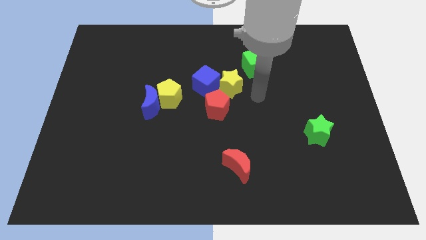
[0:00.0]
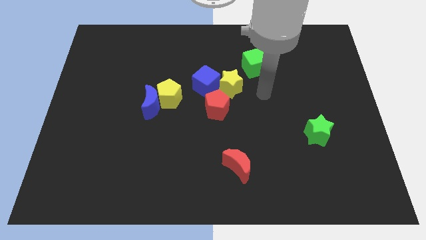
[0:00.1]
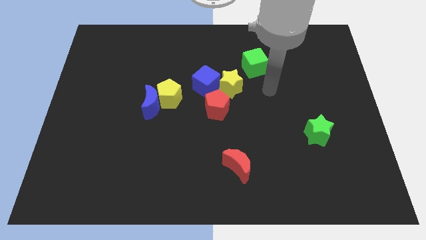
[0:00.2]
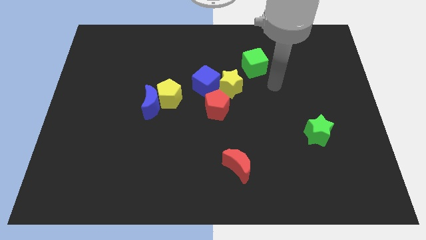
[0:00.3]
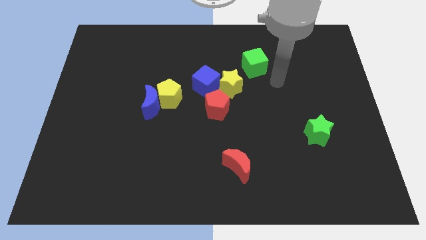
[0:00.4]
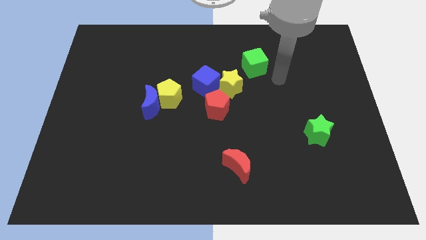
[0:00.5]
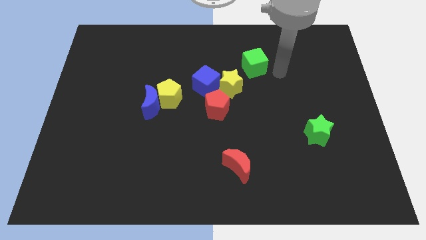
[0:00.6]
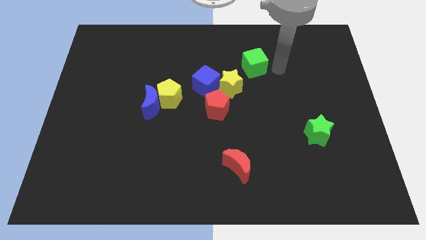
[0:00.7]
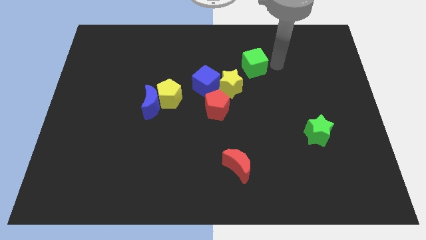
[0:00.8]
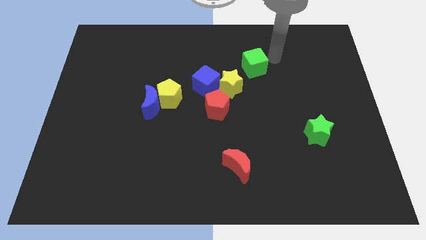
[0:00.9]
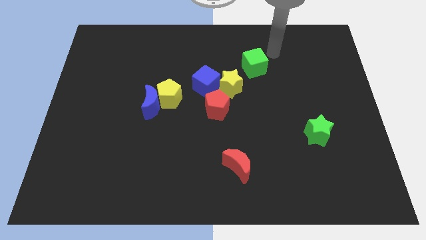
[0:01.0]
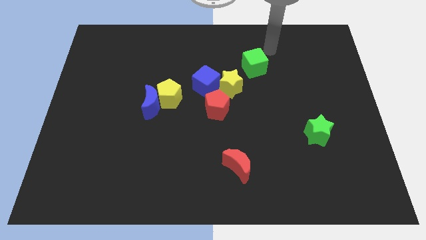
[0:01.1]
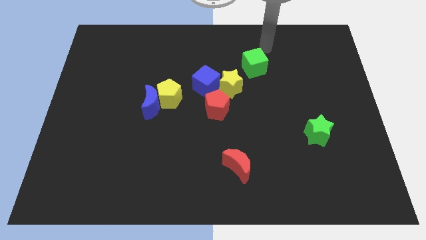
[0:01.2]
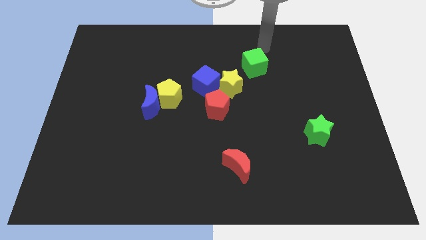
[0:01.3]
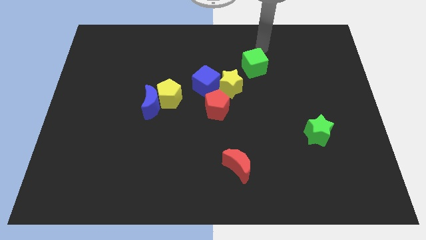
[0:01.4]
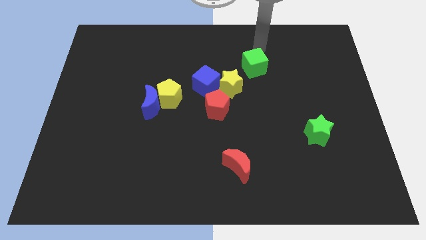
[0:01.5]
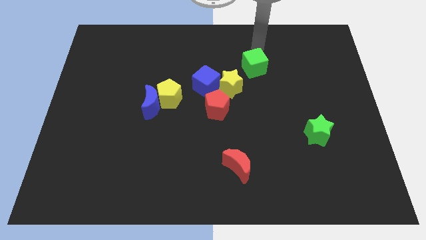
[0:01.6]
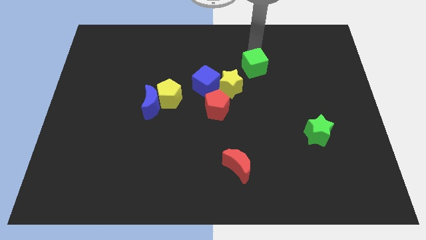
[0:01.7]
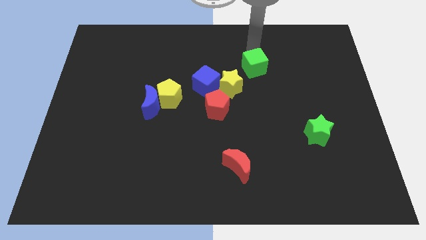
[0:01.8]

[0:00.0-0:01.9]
go to the top side of the green cube

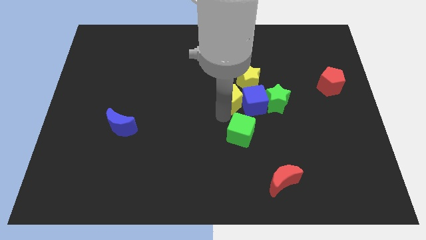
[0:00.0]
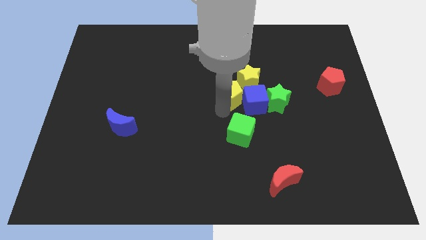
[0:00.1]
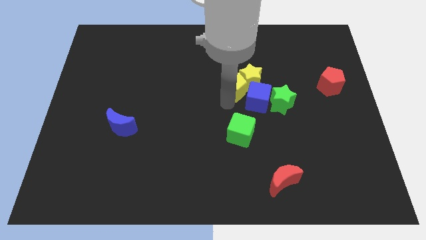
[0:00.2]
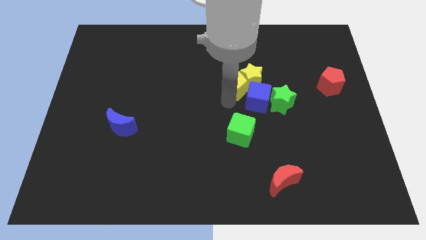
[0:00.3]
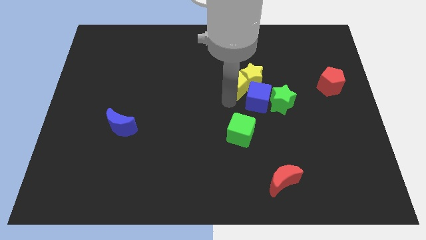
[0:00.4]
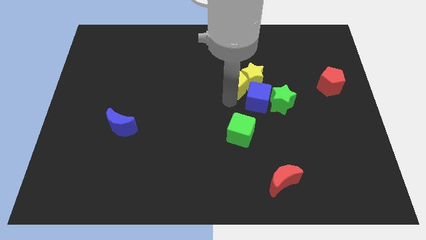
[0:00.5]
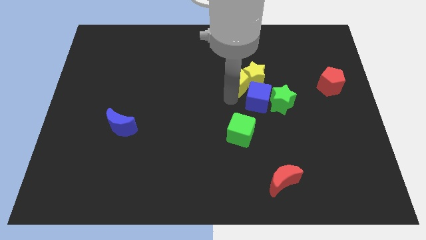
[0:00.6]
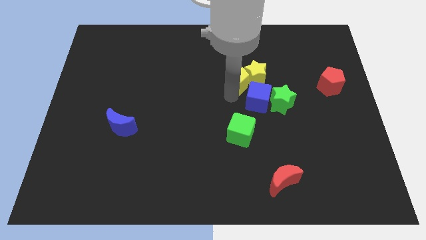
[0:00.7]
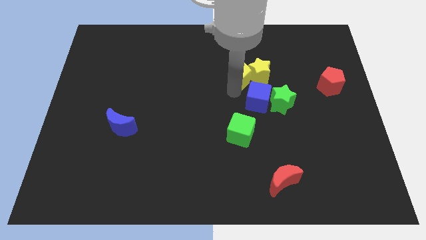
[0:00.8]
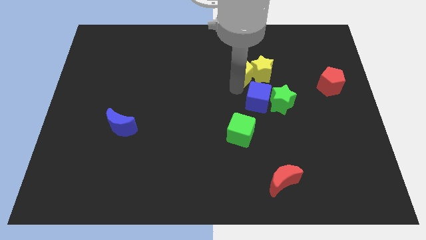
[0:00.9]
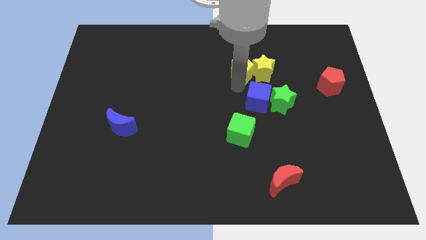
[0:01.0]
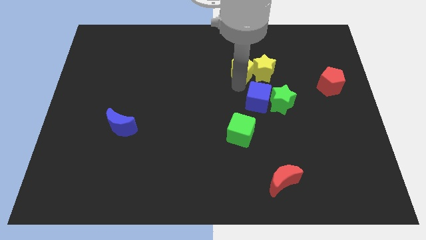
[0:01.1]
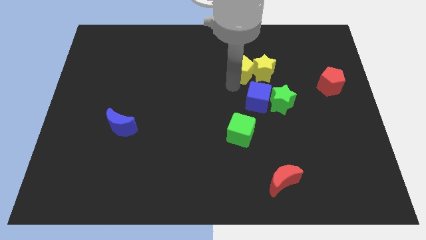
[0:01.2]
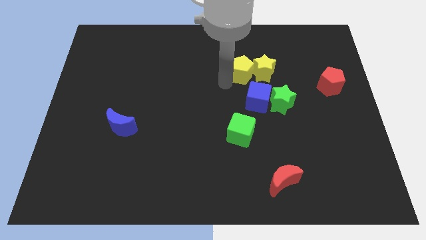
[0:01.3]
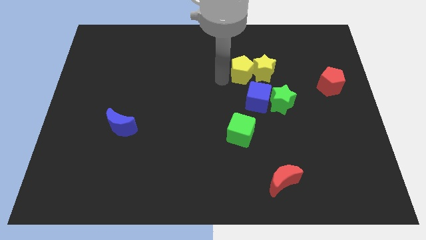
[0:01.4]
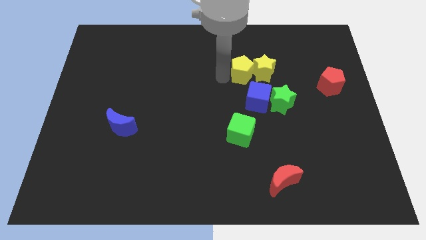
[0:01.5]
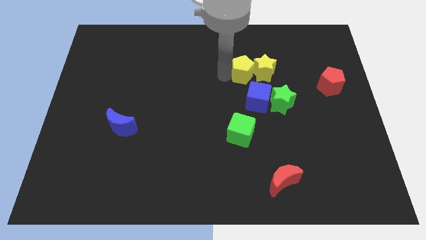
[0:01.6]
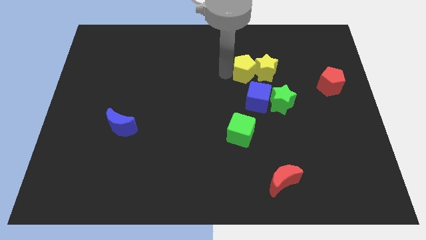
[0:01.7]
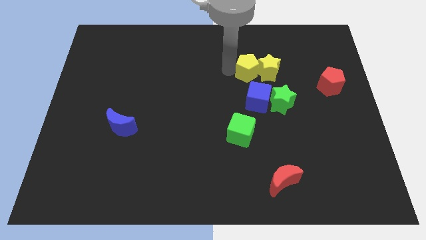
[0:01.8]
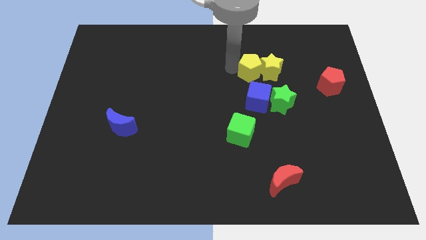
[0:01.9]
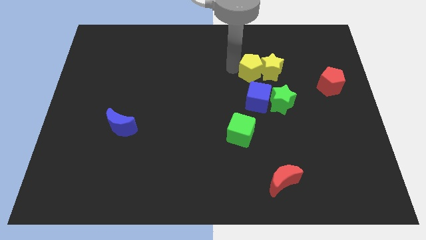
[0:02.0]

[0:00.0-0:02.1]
push the yellow pentagon along with yellow star

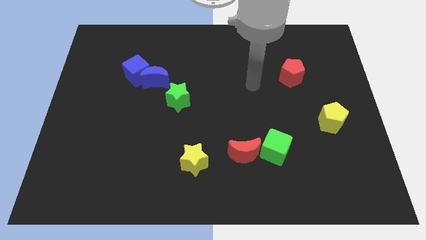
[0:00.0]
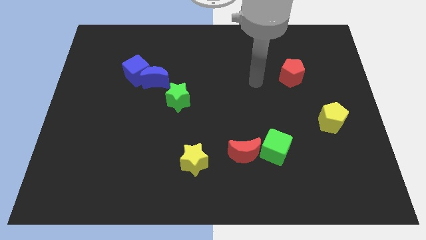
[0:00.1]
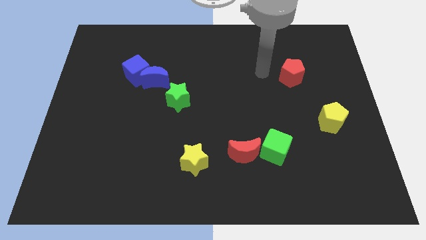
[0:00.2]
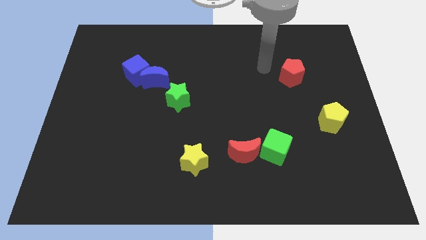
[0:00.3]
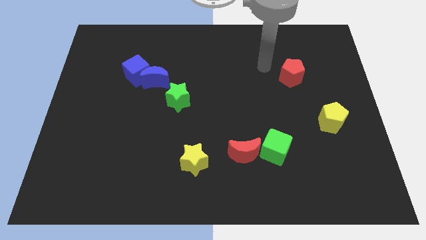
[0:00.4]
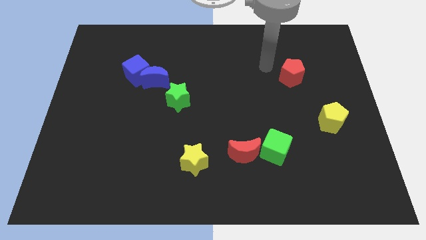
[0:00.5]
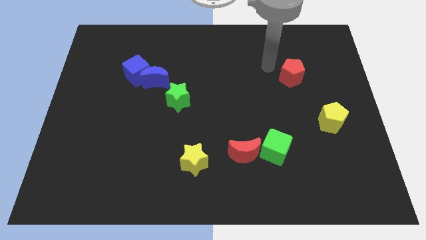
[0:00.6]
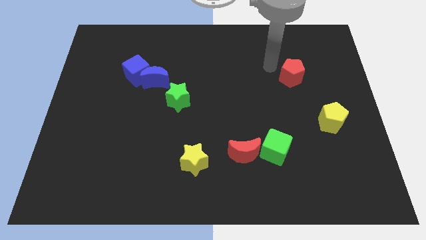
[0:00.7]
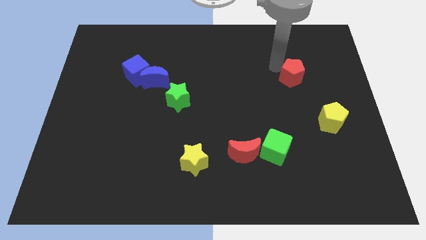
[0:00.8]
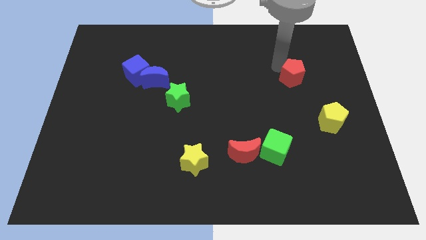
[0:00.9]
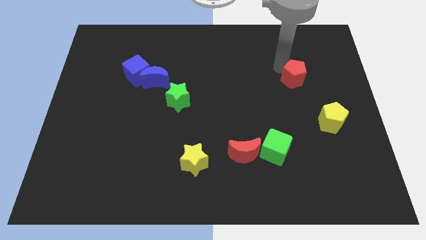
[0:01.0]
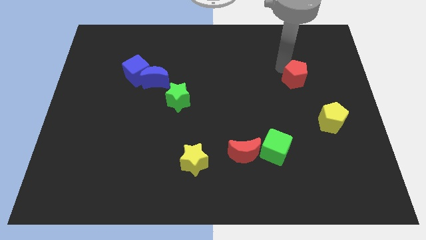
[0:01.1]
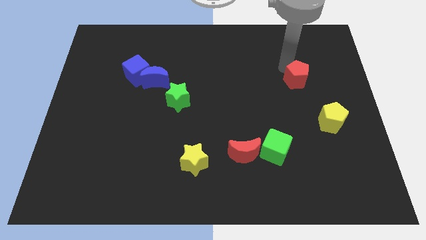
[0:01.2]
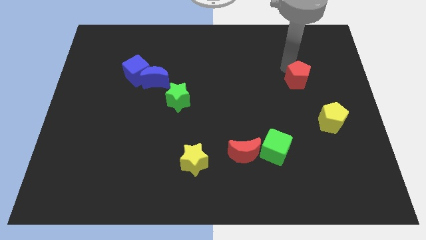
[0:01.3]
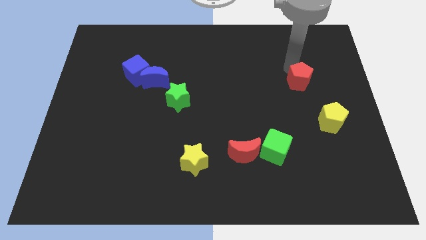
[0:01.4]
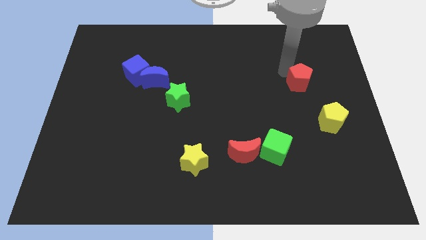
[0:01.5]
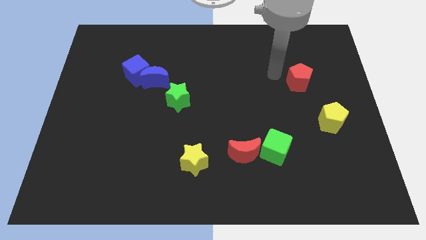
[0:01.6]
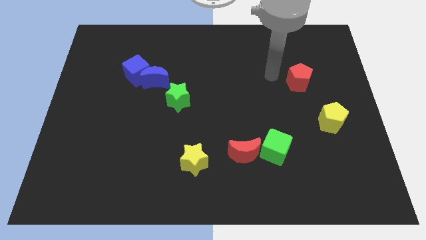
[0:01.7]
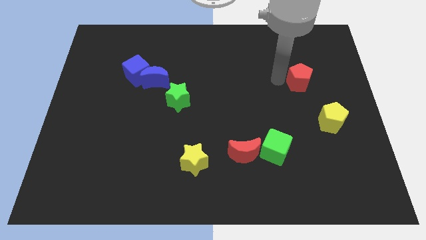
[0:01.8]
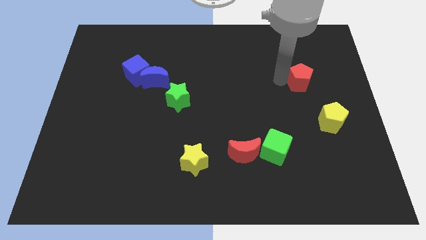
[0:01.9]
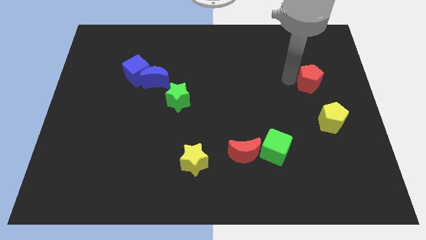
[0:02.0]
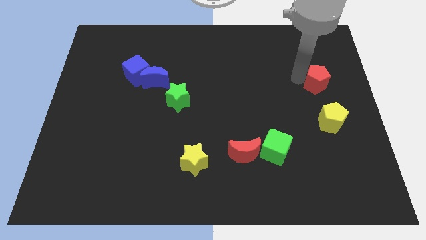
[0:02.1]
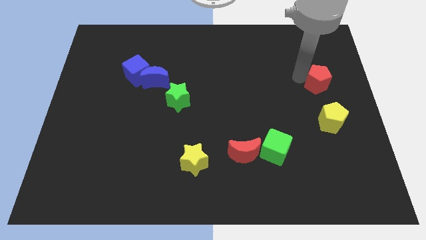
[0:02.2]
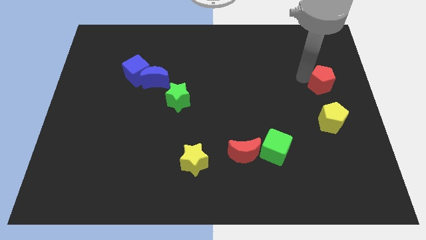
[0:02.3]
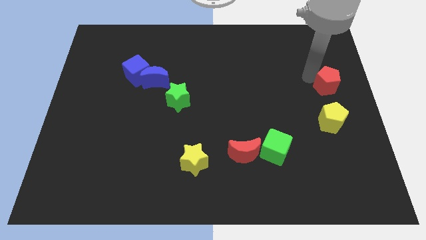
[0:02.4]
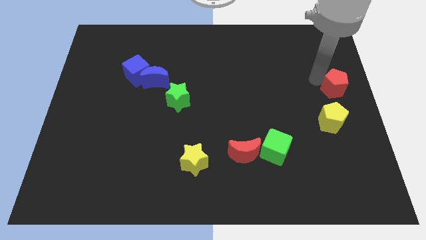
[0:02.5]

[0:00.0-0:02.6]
push the red pentagon to the top of the yellow pentagon

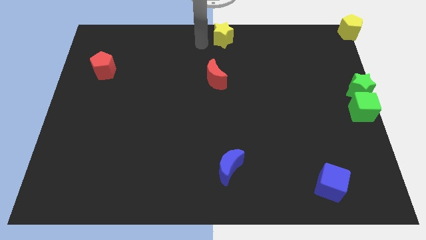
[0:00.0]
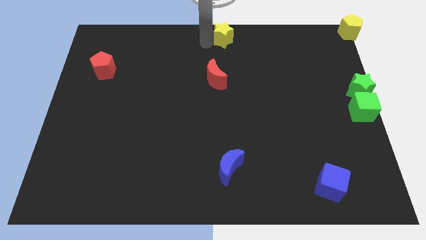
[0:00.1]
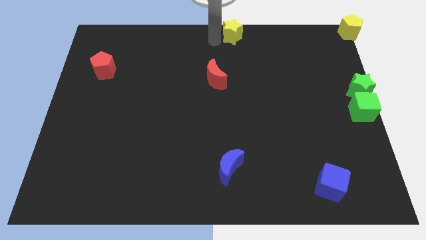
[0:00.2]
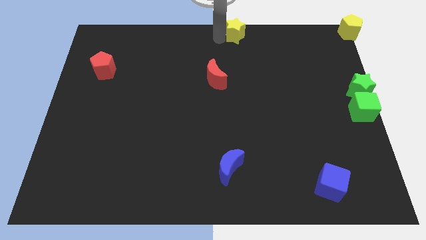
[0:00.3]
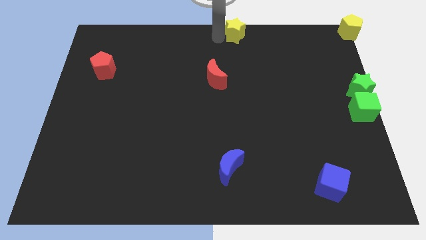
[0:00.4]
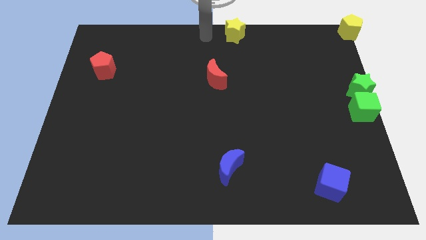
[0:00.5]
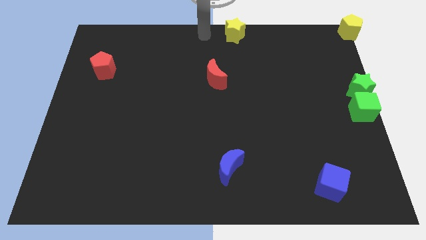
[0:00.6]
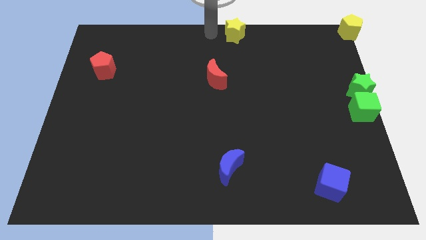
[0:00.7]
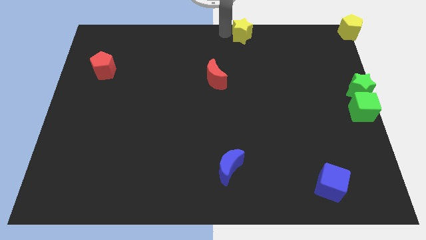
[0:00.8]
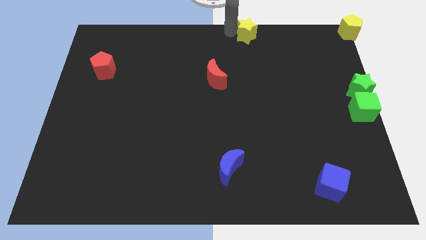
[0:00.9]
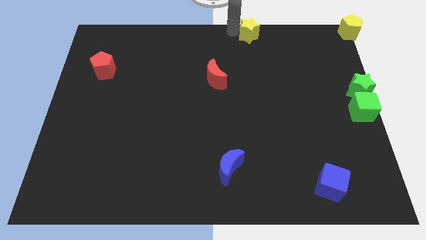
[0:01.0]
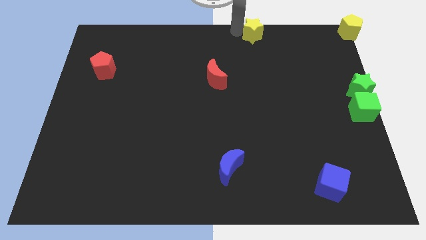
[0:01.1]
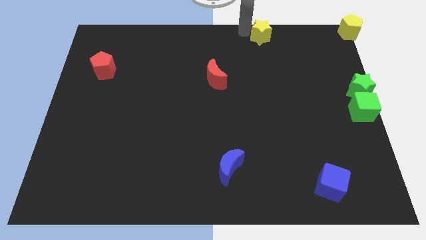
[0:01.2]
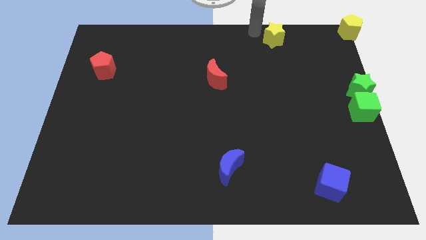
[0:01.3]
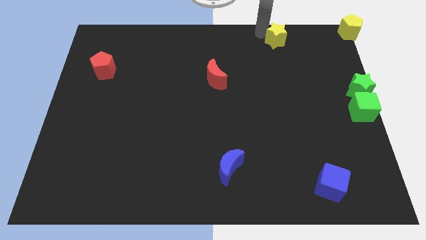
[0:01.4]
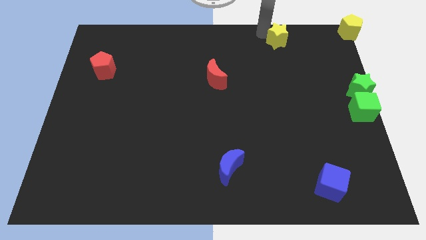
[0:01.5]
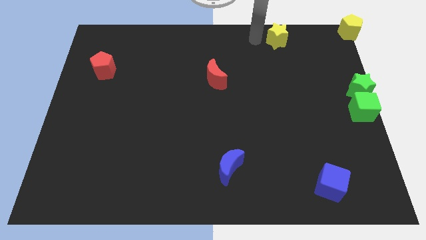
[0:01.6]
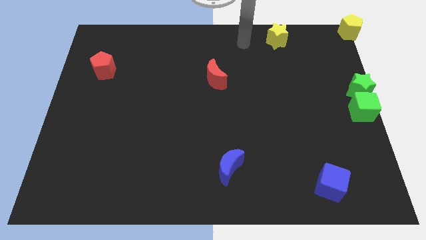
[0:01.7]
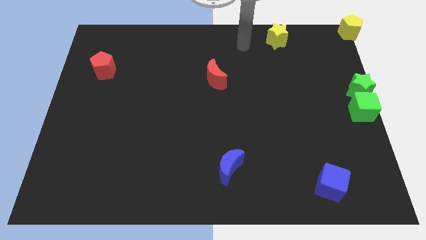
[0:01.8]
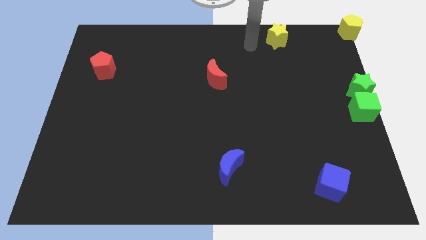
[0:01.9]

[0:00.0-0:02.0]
move the yellow star to the right side of the yellow pentagon

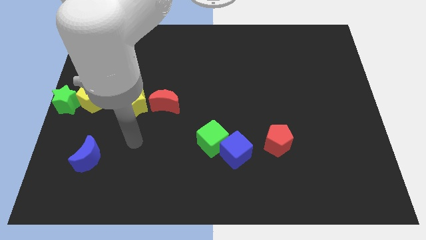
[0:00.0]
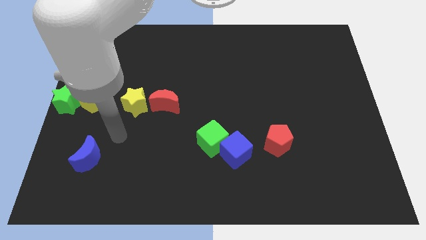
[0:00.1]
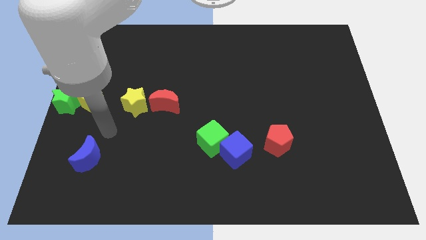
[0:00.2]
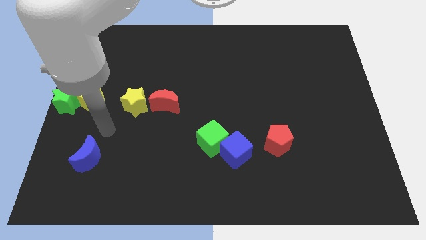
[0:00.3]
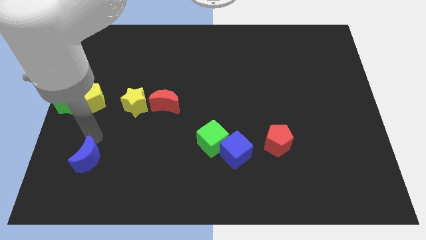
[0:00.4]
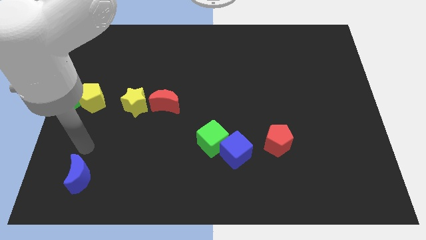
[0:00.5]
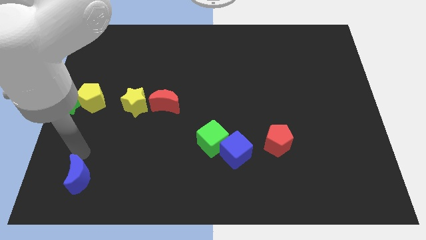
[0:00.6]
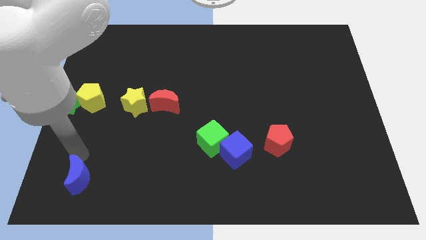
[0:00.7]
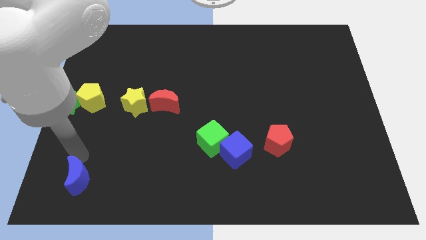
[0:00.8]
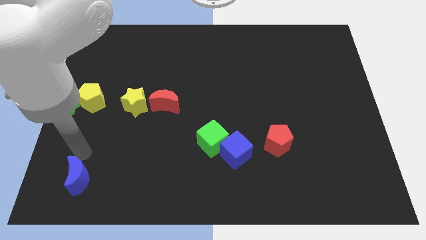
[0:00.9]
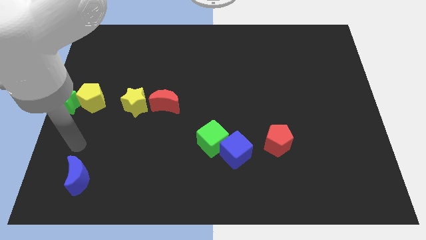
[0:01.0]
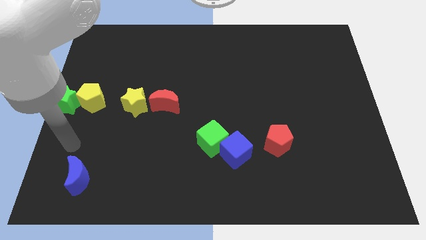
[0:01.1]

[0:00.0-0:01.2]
push the blue moon slightly towards the bottom
